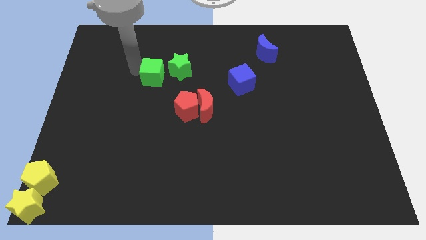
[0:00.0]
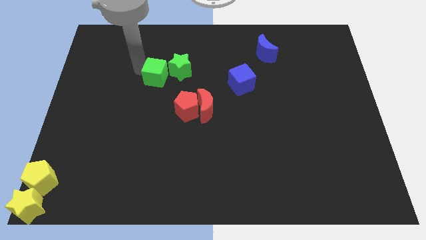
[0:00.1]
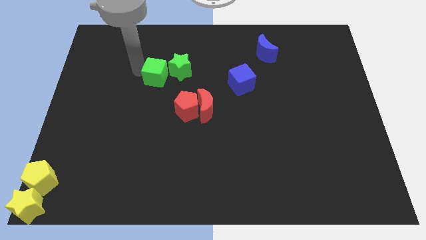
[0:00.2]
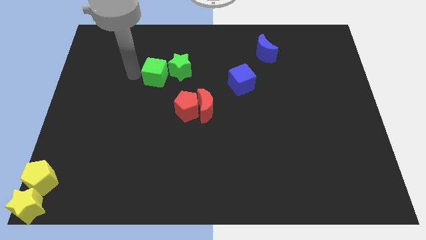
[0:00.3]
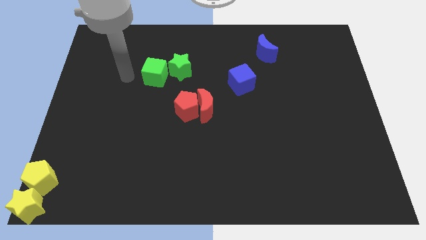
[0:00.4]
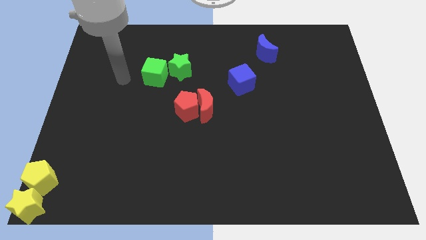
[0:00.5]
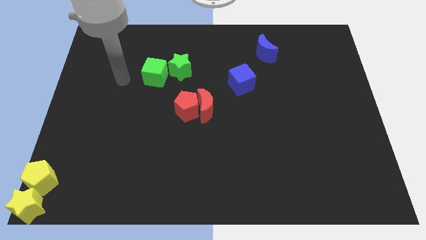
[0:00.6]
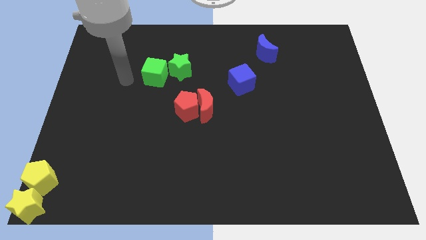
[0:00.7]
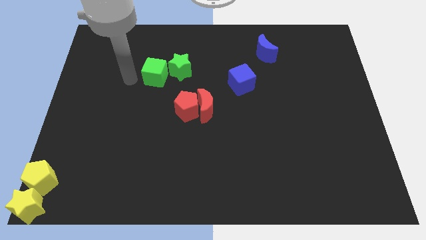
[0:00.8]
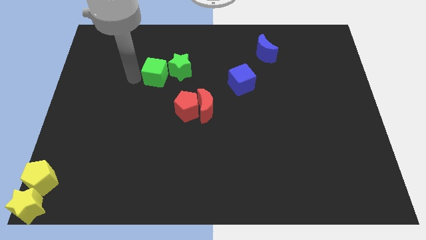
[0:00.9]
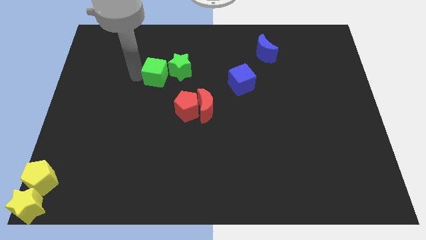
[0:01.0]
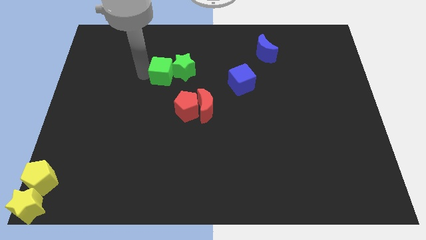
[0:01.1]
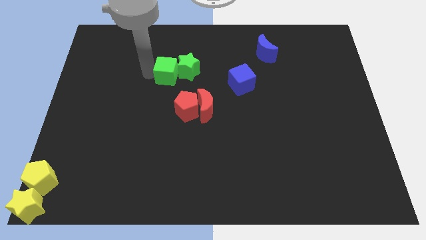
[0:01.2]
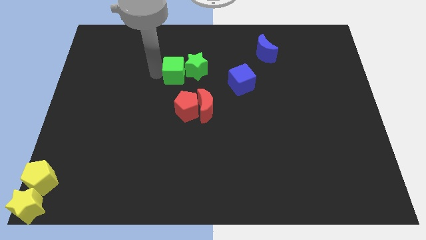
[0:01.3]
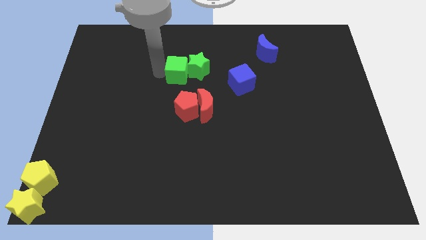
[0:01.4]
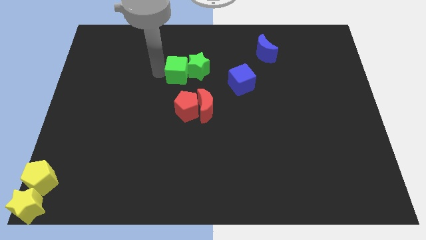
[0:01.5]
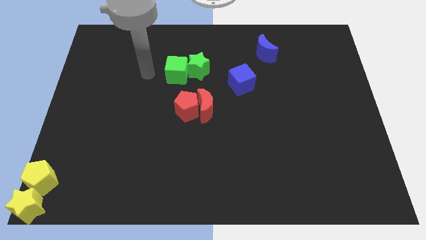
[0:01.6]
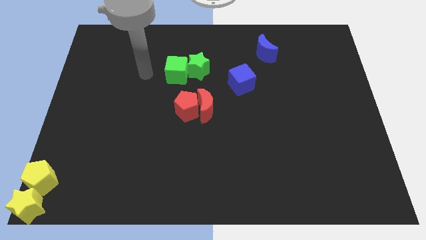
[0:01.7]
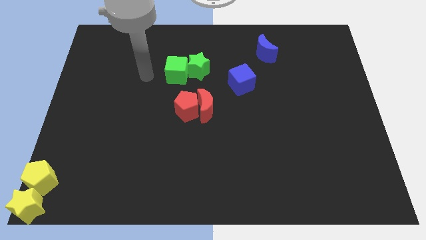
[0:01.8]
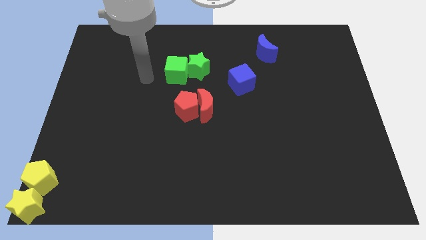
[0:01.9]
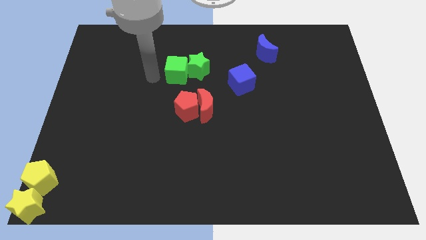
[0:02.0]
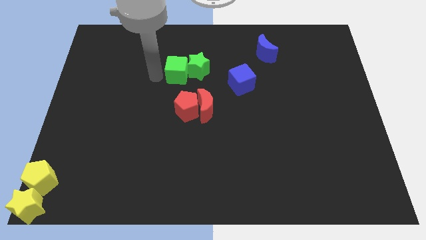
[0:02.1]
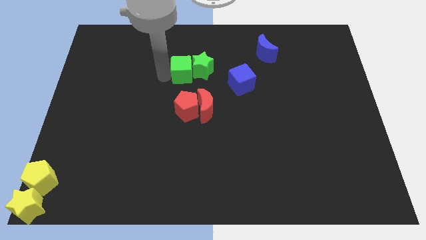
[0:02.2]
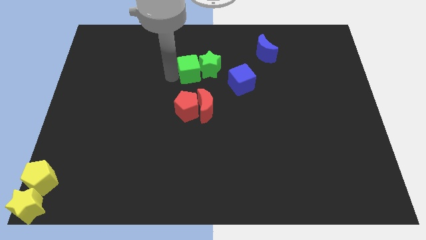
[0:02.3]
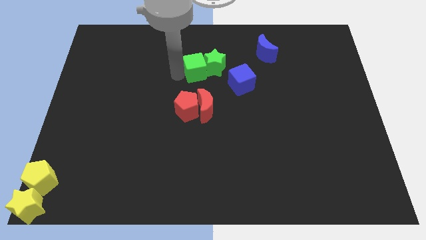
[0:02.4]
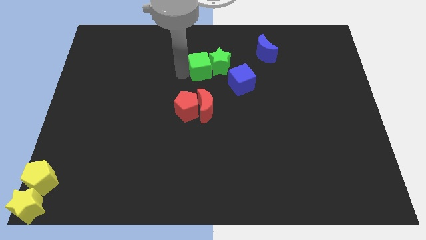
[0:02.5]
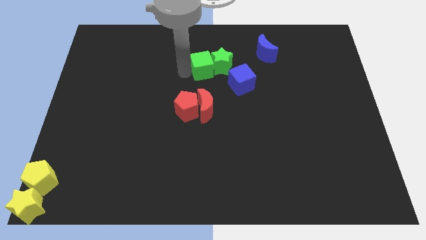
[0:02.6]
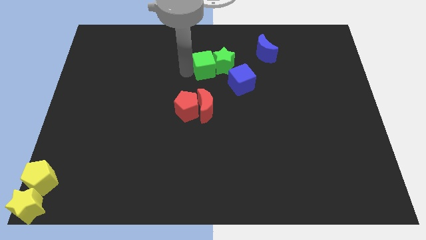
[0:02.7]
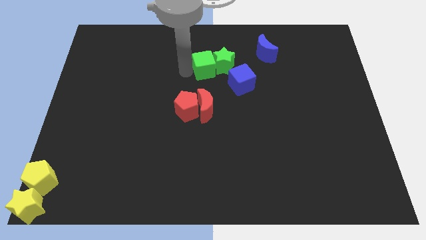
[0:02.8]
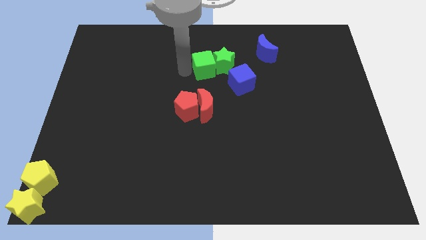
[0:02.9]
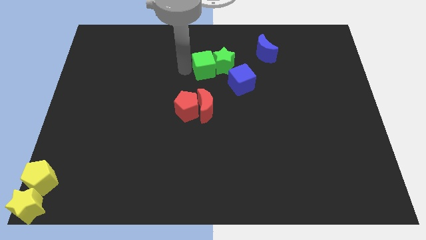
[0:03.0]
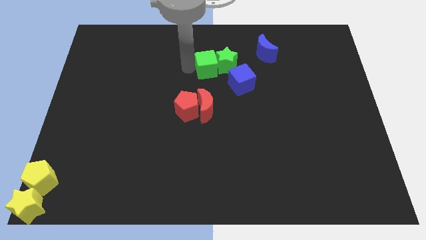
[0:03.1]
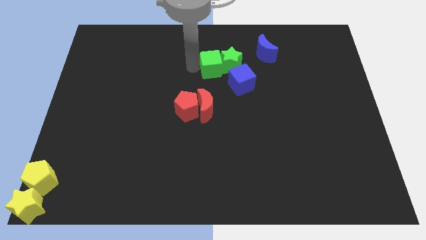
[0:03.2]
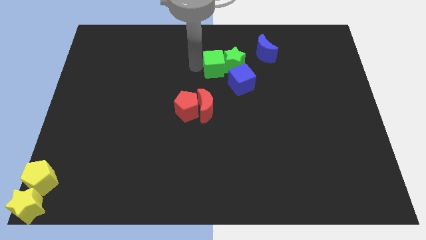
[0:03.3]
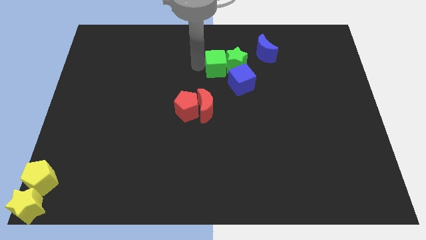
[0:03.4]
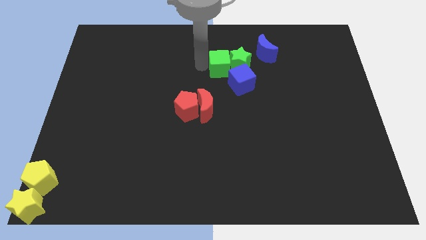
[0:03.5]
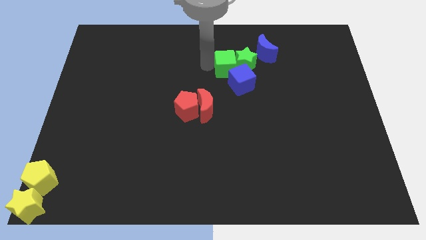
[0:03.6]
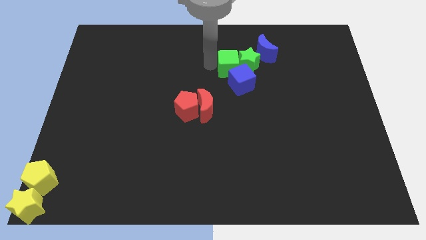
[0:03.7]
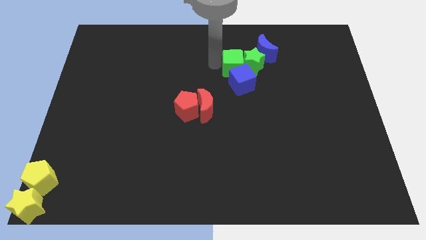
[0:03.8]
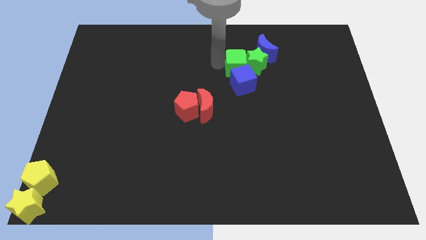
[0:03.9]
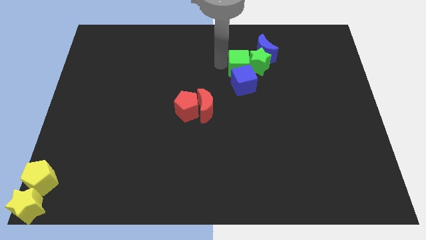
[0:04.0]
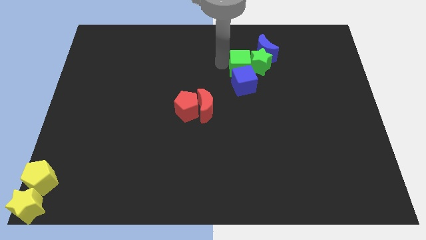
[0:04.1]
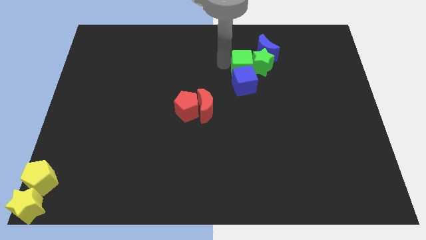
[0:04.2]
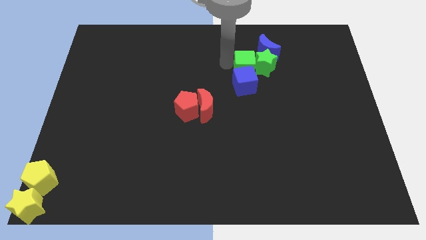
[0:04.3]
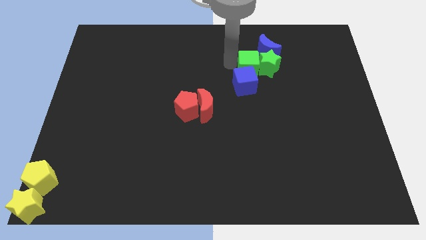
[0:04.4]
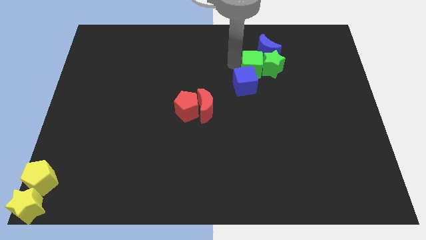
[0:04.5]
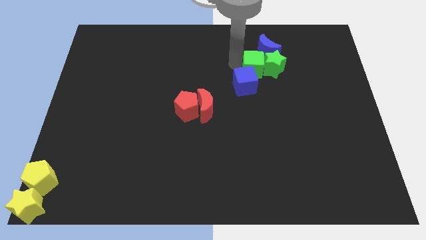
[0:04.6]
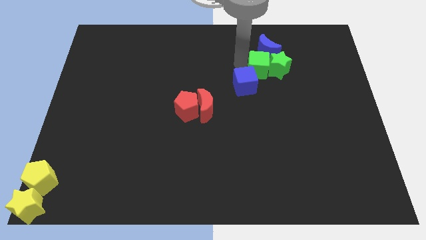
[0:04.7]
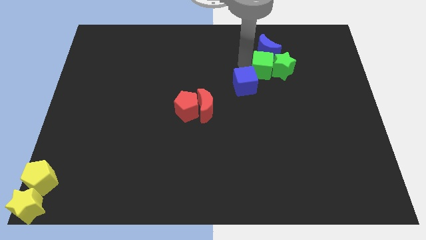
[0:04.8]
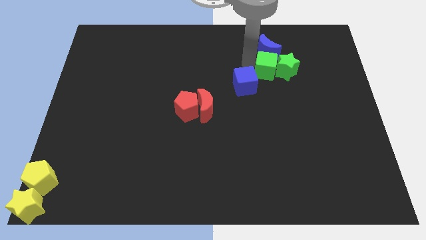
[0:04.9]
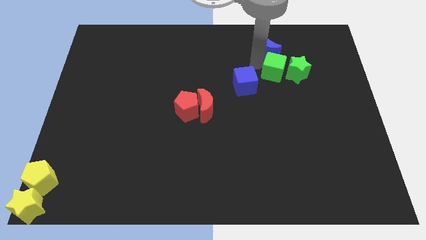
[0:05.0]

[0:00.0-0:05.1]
push the green cube and the green star towards the right side

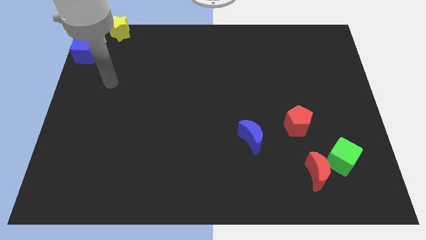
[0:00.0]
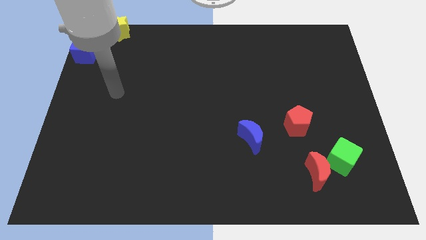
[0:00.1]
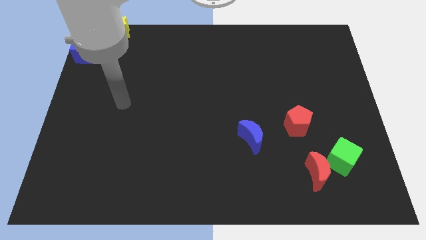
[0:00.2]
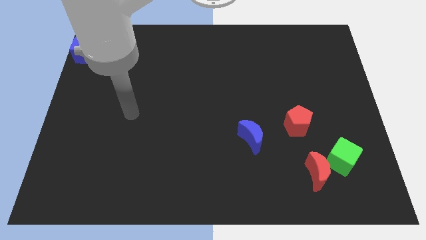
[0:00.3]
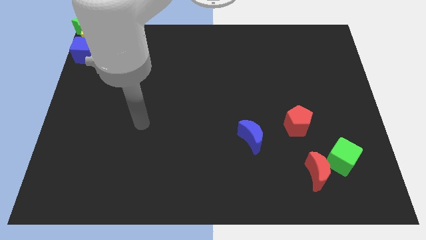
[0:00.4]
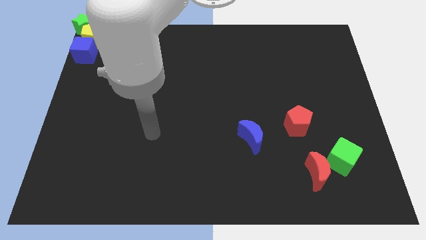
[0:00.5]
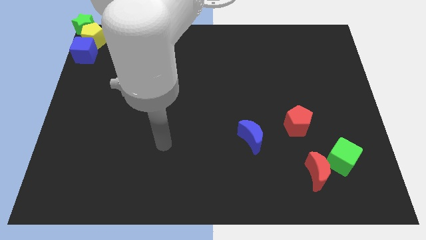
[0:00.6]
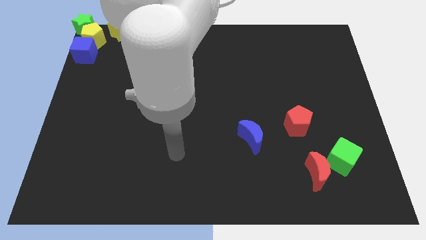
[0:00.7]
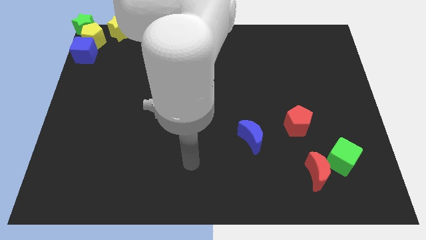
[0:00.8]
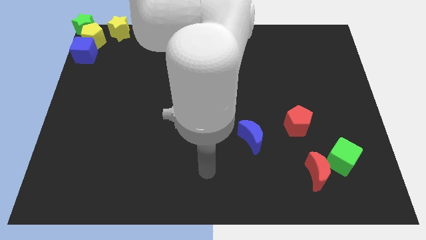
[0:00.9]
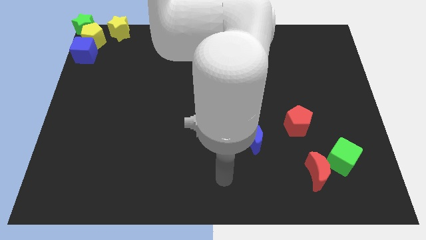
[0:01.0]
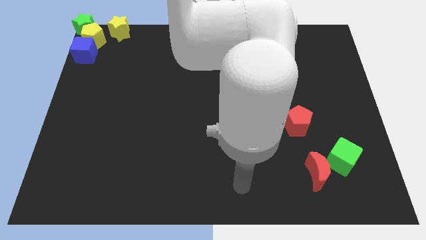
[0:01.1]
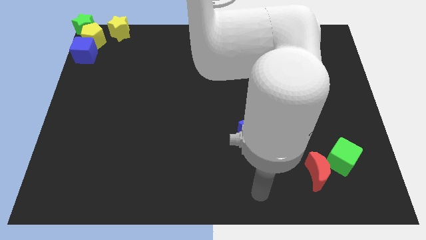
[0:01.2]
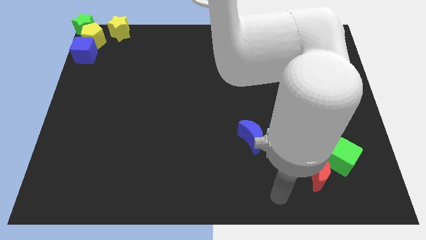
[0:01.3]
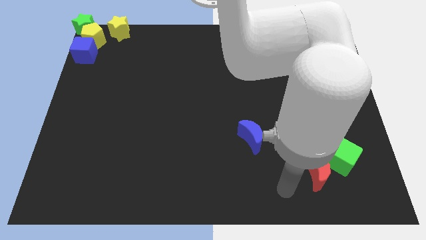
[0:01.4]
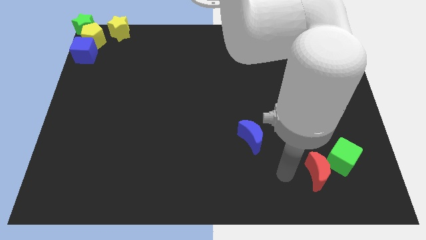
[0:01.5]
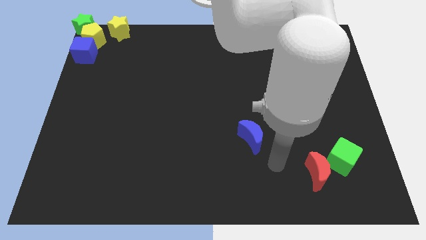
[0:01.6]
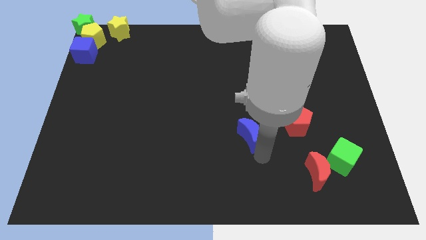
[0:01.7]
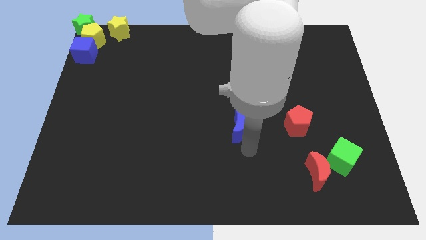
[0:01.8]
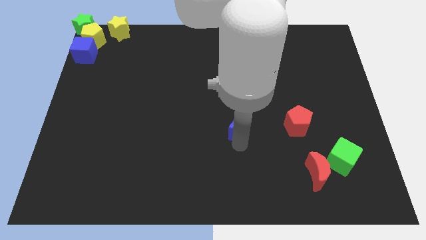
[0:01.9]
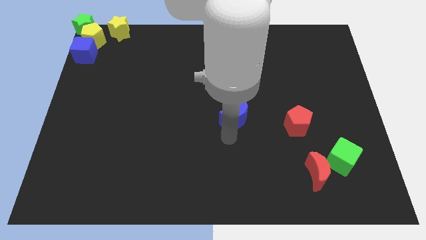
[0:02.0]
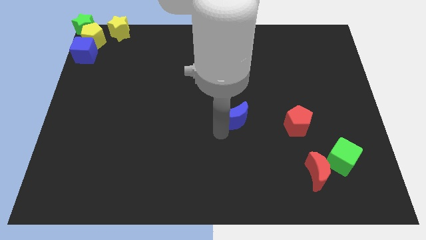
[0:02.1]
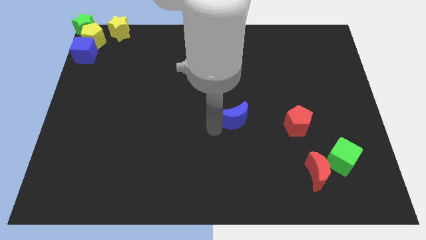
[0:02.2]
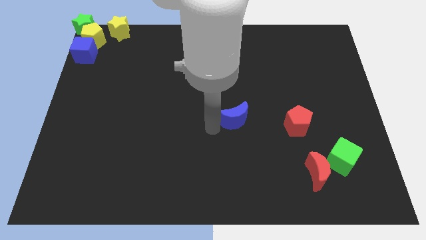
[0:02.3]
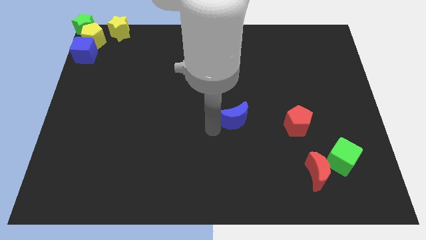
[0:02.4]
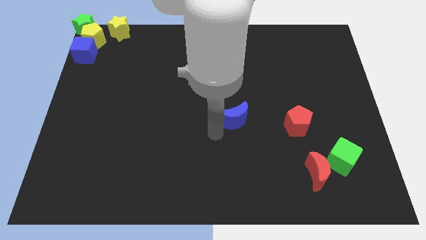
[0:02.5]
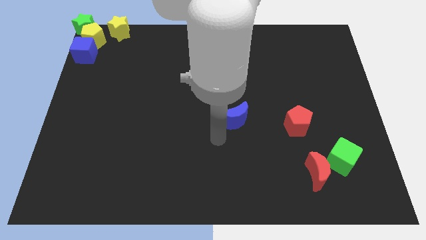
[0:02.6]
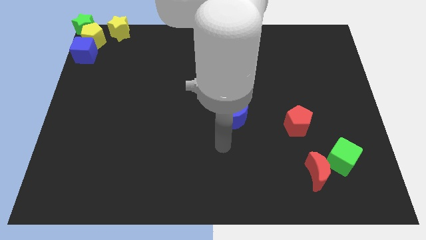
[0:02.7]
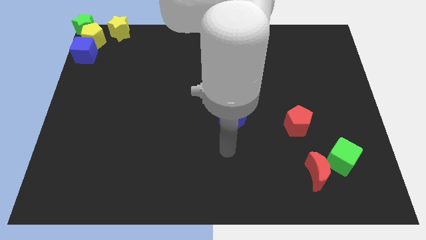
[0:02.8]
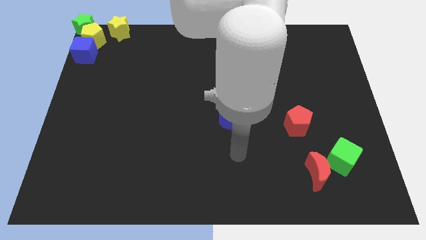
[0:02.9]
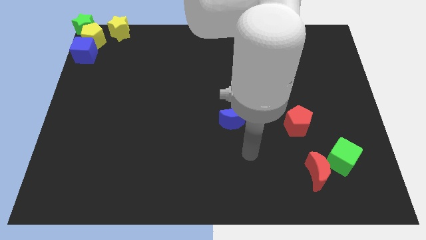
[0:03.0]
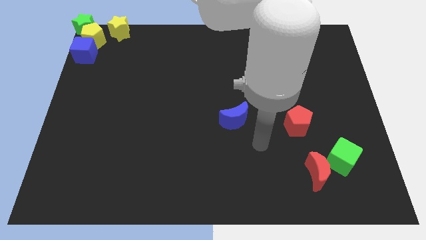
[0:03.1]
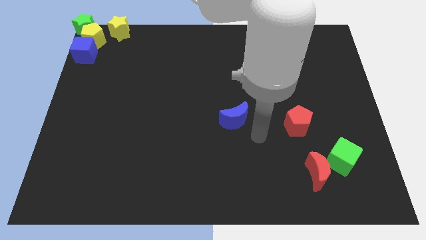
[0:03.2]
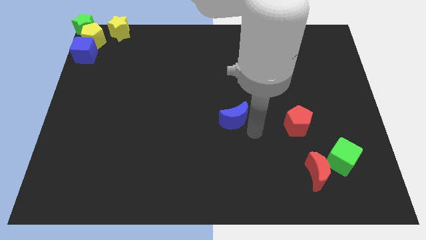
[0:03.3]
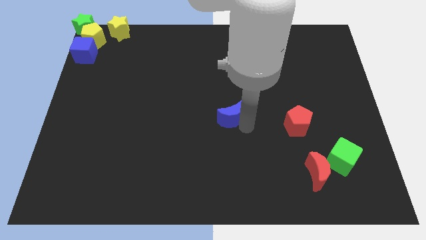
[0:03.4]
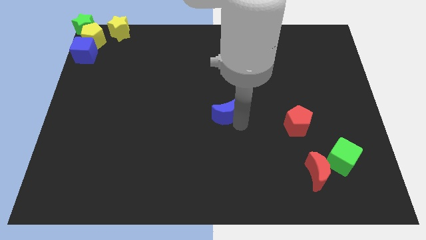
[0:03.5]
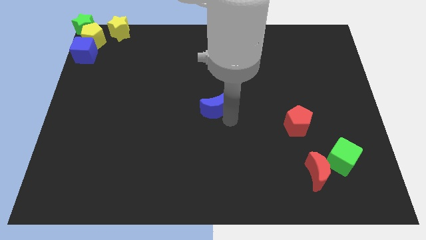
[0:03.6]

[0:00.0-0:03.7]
place blue moon to the center of the board
